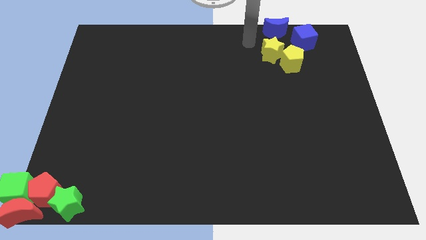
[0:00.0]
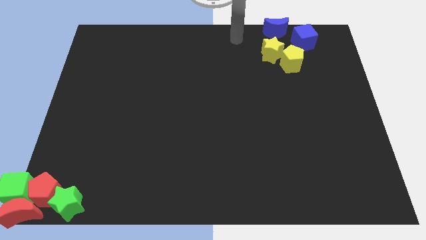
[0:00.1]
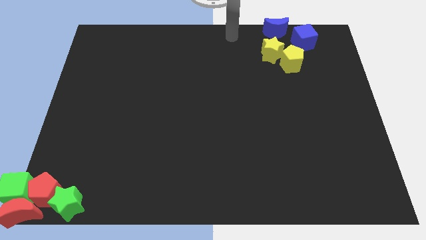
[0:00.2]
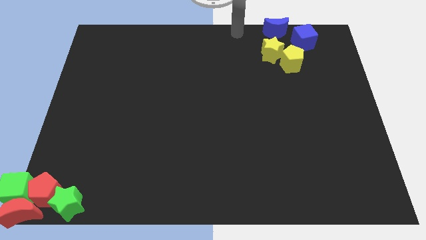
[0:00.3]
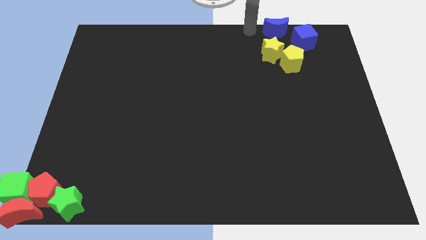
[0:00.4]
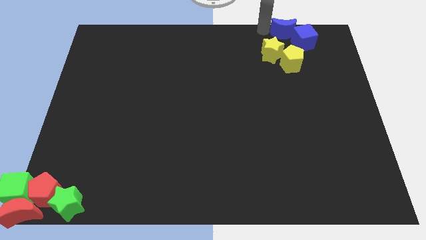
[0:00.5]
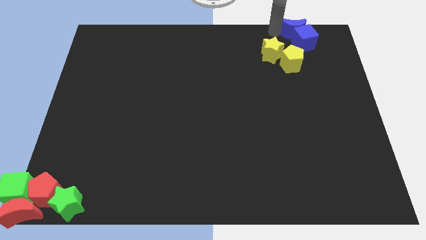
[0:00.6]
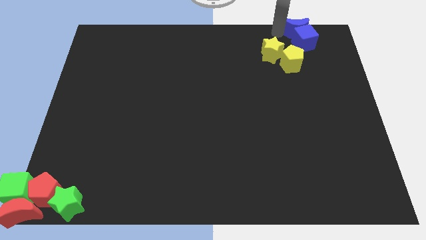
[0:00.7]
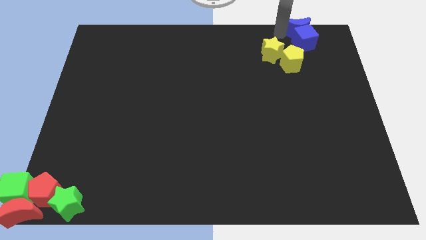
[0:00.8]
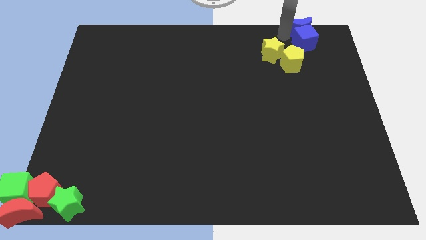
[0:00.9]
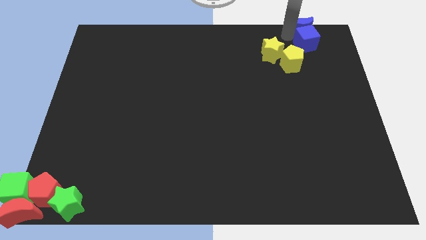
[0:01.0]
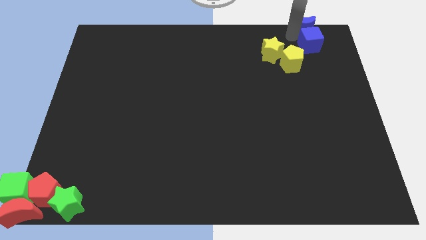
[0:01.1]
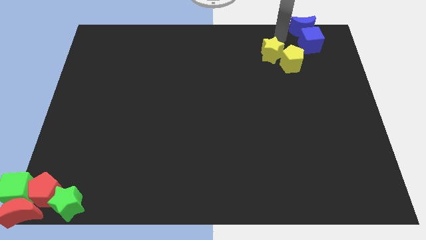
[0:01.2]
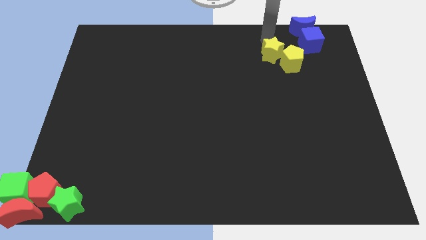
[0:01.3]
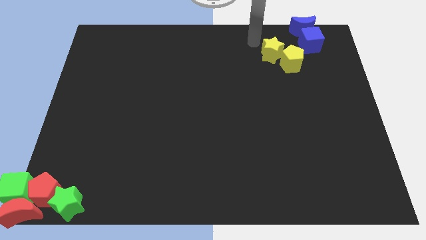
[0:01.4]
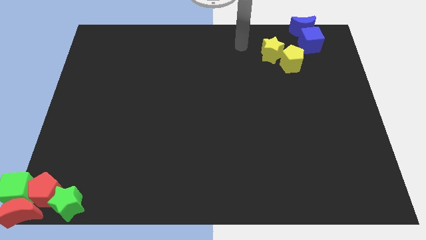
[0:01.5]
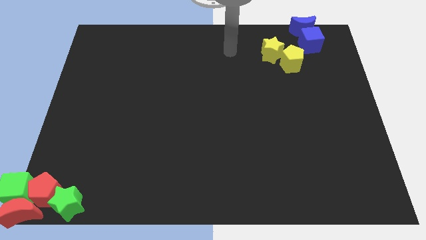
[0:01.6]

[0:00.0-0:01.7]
slide the blue moon to the top side of the blue cube

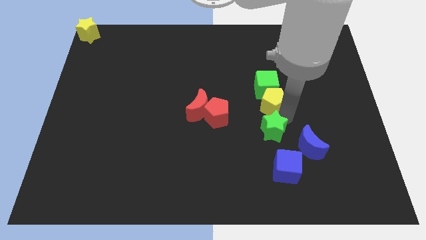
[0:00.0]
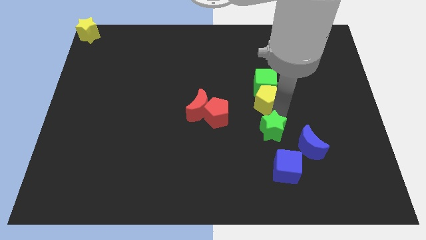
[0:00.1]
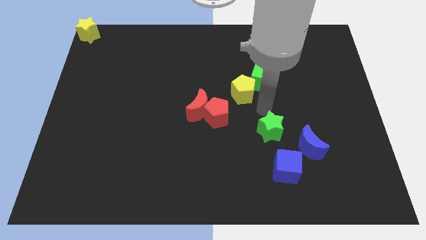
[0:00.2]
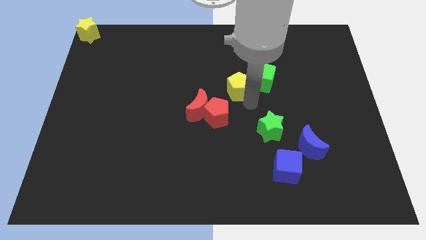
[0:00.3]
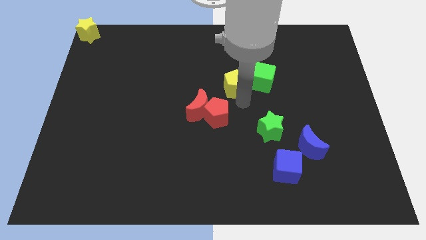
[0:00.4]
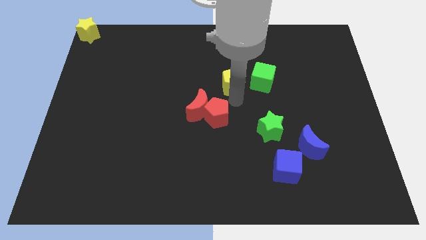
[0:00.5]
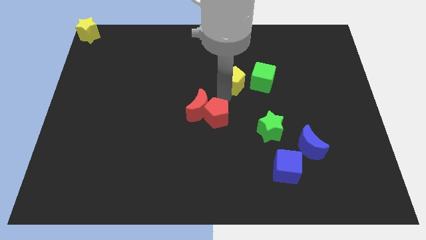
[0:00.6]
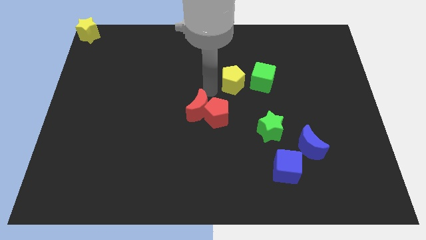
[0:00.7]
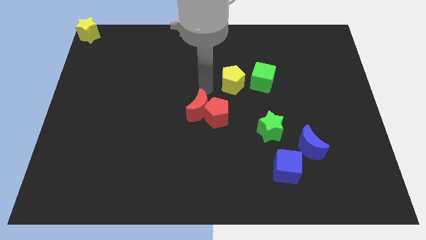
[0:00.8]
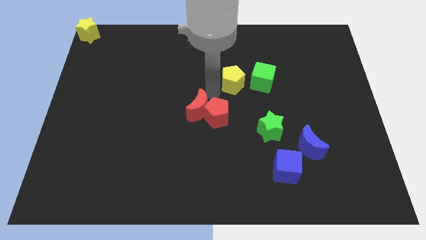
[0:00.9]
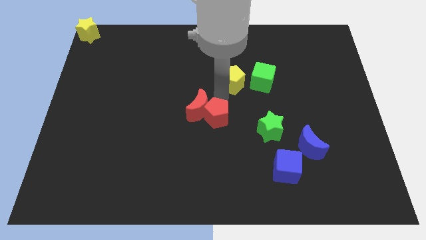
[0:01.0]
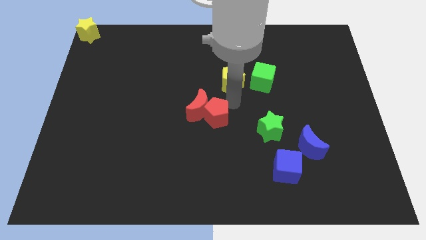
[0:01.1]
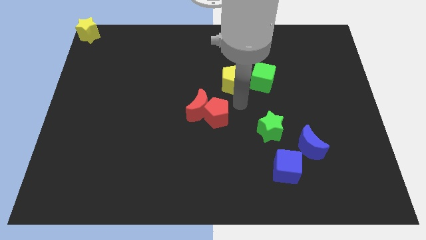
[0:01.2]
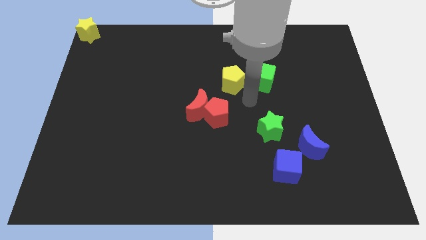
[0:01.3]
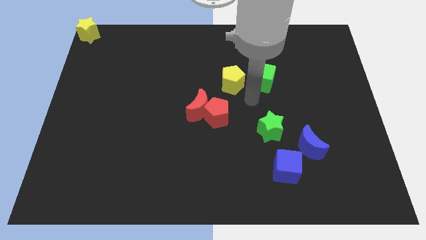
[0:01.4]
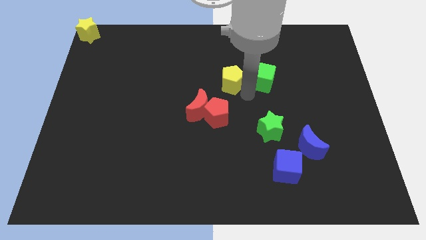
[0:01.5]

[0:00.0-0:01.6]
push yellow pentagon to the left of green cube

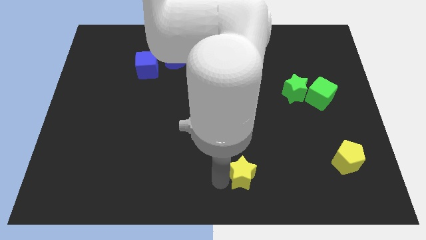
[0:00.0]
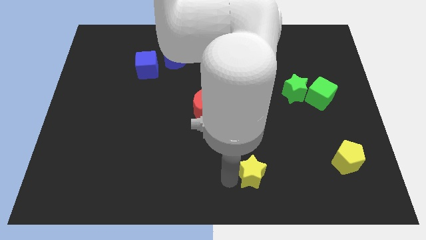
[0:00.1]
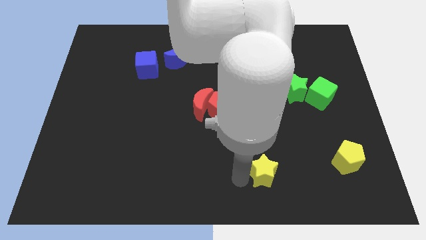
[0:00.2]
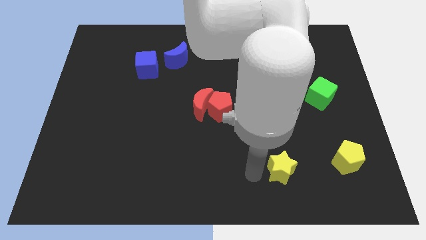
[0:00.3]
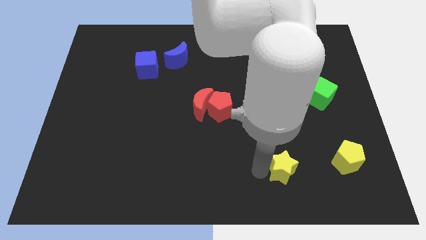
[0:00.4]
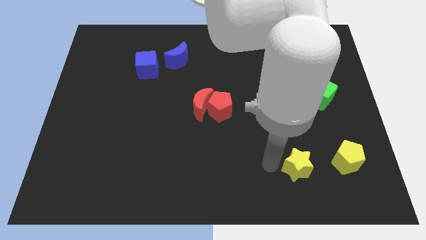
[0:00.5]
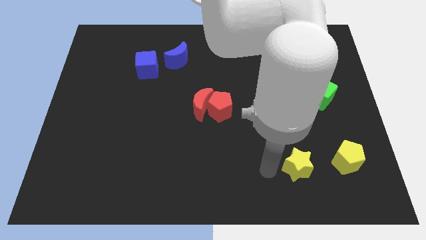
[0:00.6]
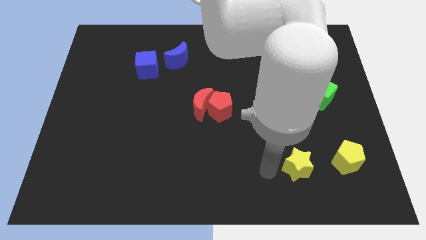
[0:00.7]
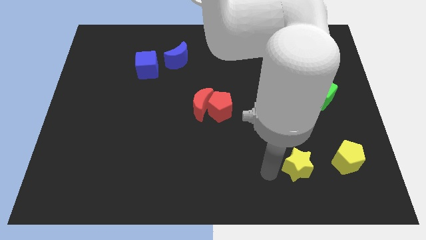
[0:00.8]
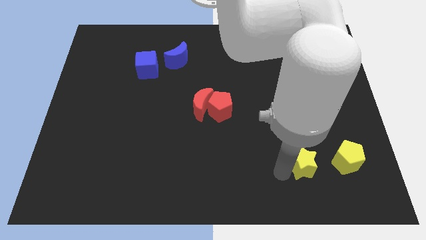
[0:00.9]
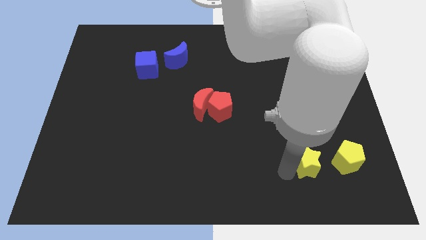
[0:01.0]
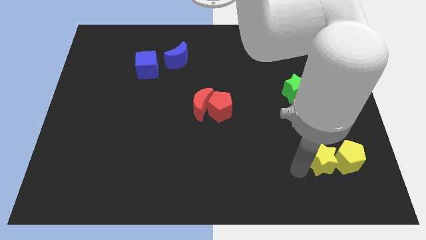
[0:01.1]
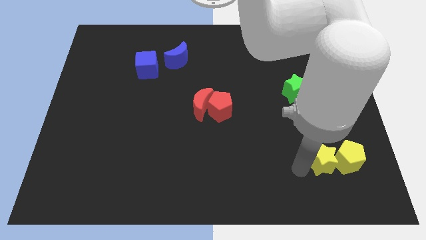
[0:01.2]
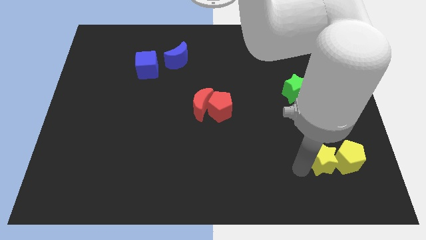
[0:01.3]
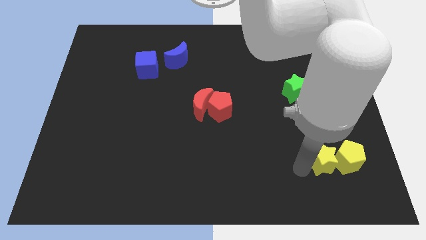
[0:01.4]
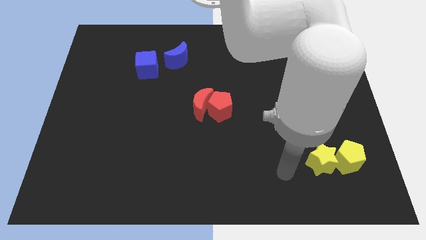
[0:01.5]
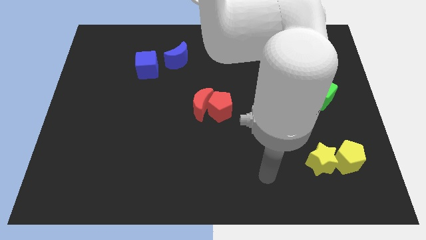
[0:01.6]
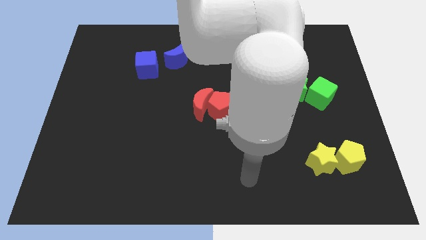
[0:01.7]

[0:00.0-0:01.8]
push the yellow star into the yellow pentagon

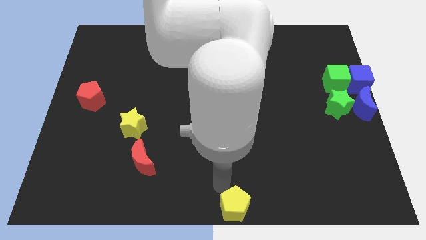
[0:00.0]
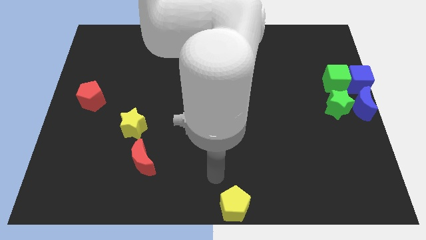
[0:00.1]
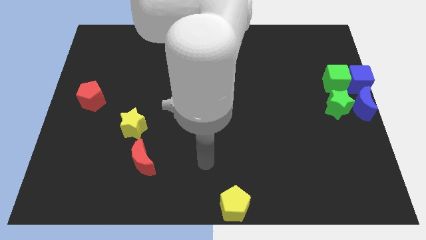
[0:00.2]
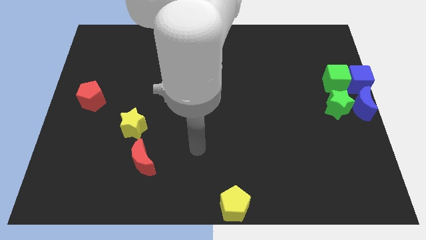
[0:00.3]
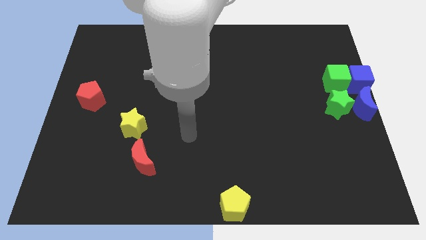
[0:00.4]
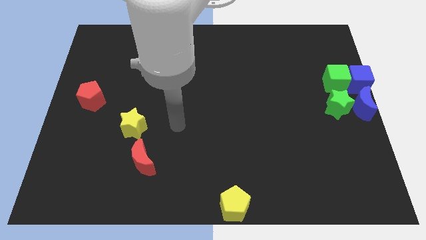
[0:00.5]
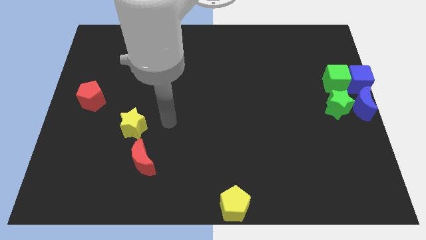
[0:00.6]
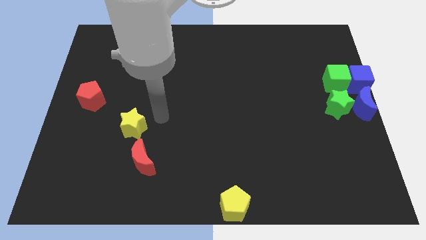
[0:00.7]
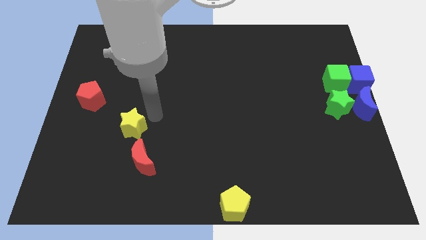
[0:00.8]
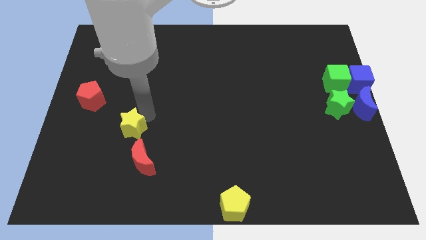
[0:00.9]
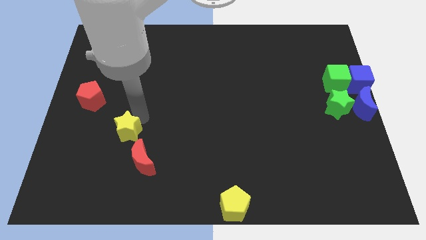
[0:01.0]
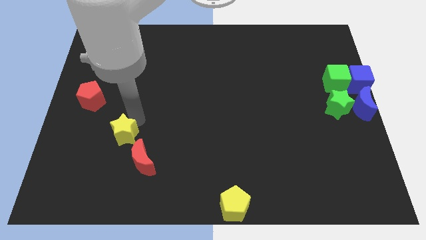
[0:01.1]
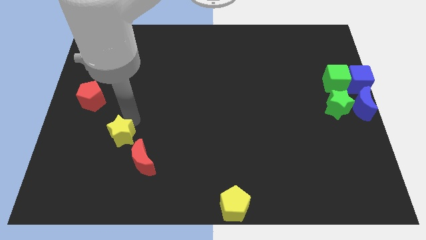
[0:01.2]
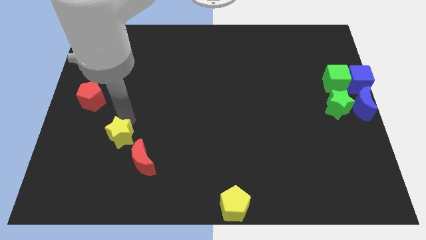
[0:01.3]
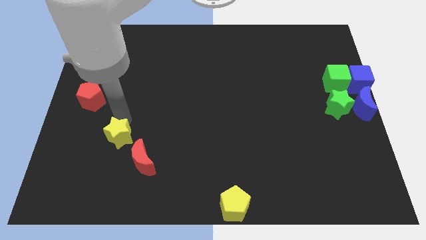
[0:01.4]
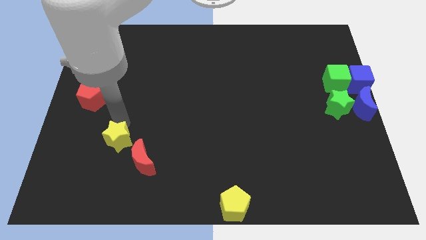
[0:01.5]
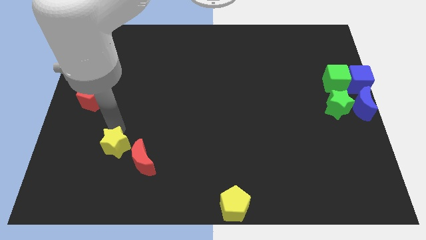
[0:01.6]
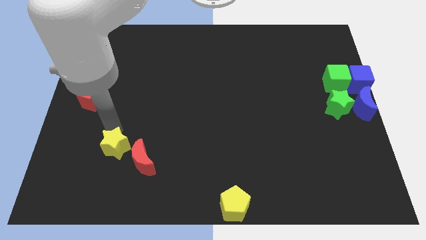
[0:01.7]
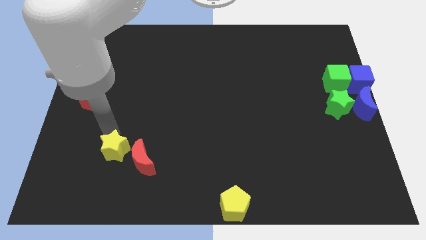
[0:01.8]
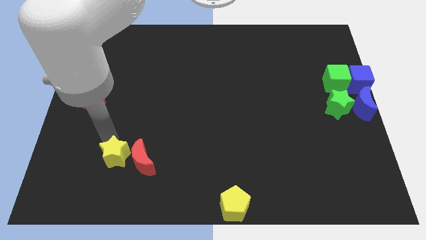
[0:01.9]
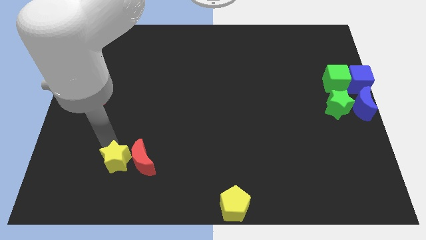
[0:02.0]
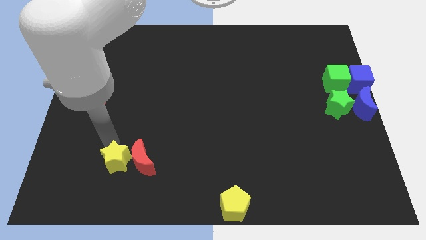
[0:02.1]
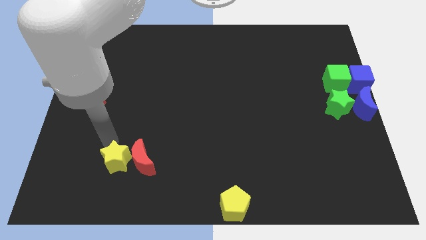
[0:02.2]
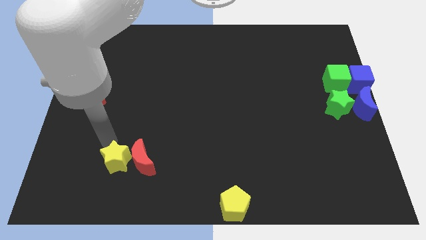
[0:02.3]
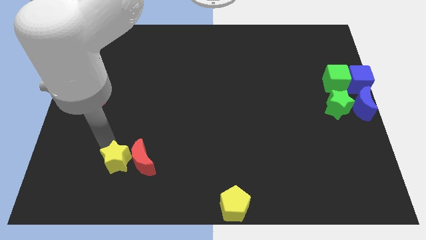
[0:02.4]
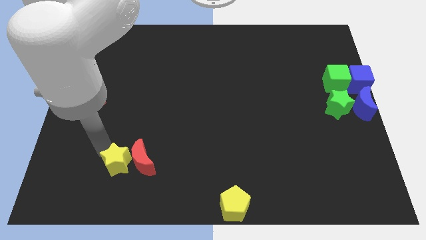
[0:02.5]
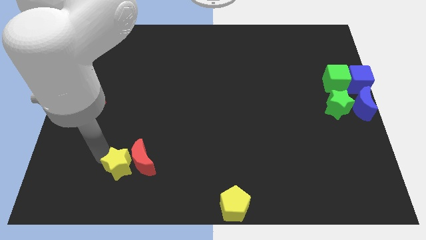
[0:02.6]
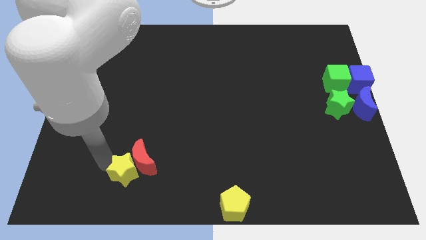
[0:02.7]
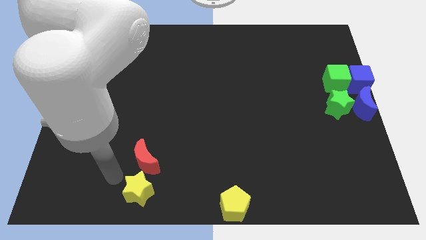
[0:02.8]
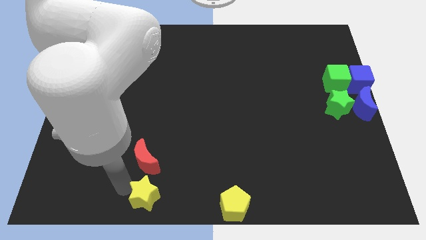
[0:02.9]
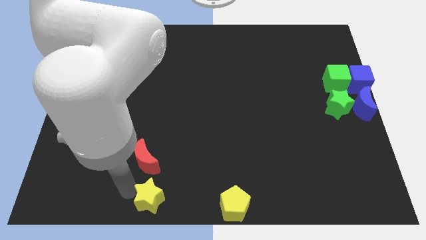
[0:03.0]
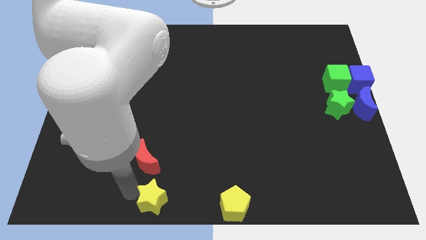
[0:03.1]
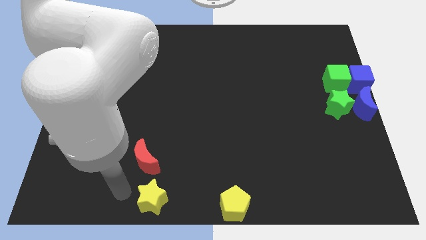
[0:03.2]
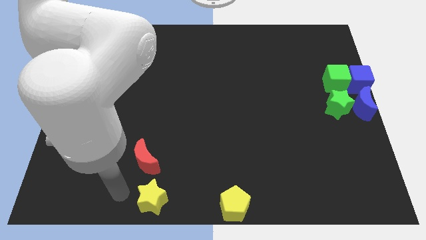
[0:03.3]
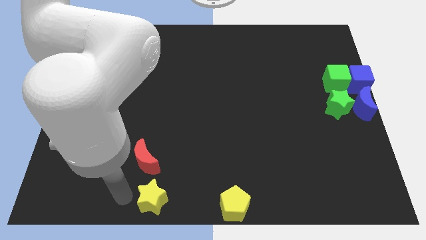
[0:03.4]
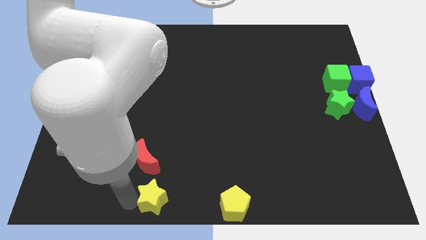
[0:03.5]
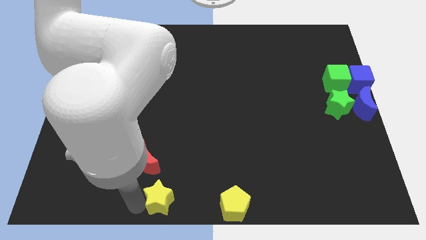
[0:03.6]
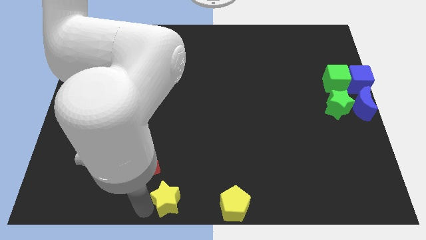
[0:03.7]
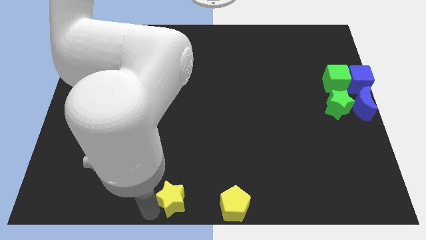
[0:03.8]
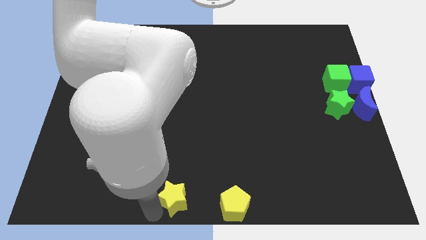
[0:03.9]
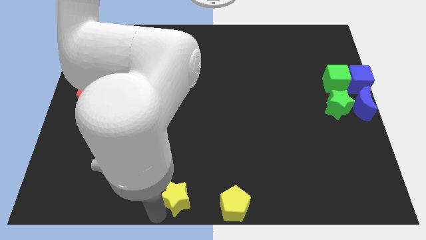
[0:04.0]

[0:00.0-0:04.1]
separate yellow star from the red crescent
